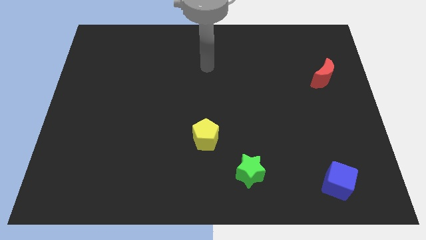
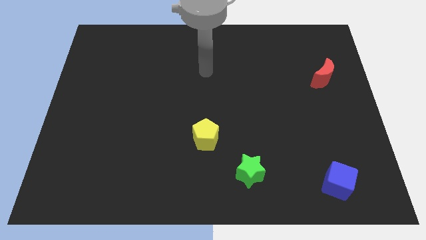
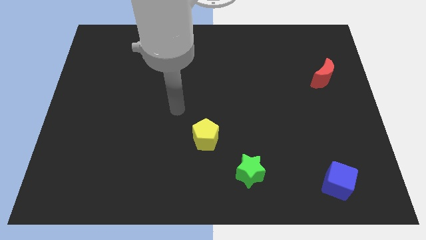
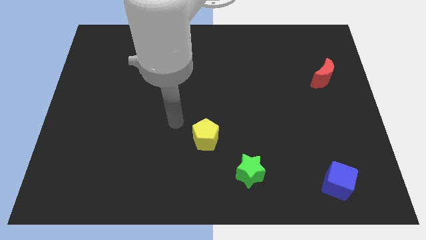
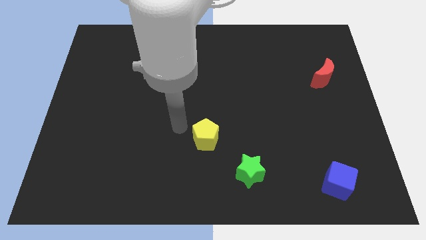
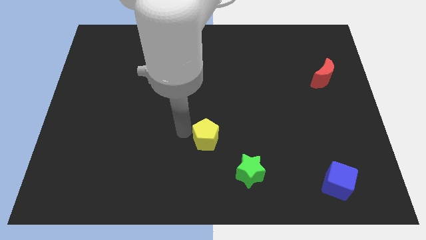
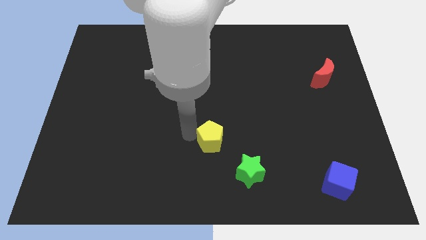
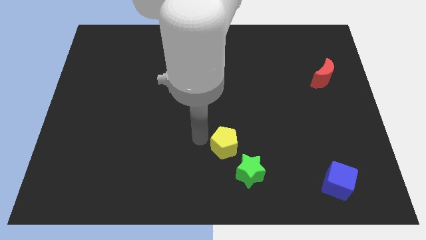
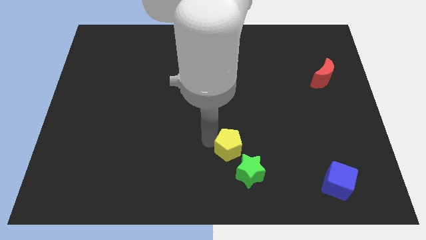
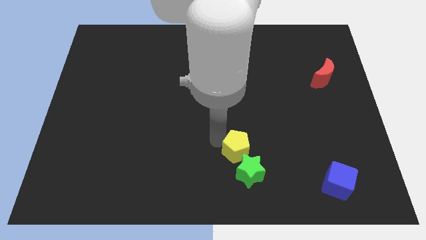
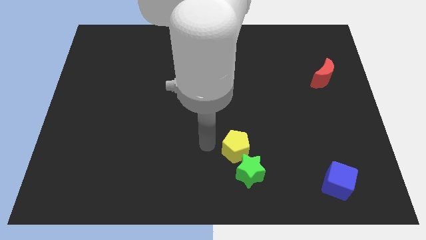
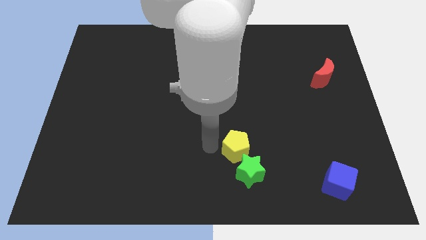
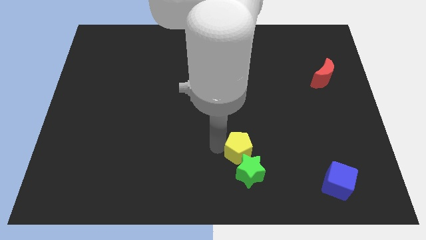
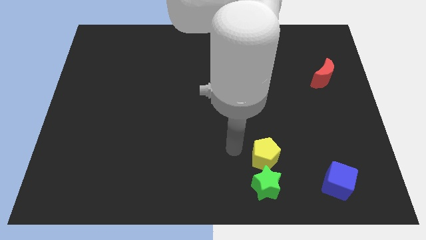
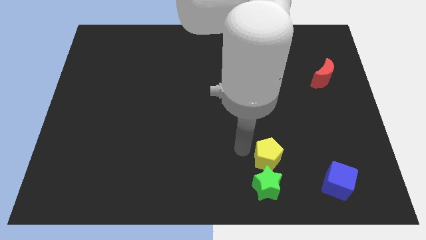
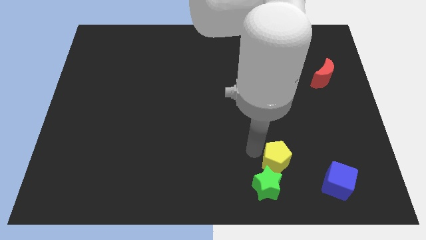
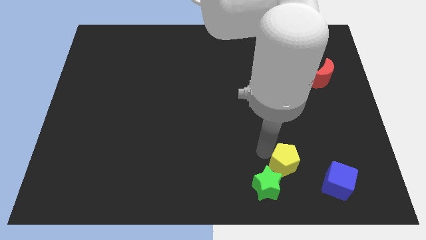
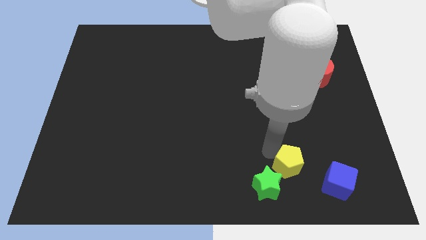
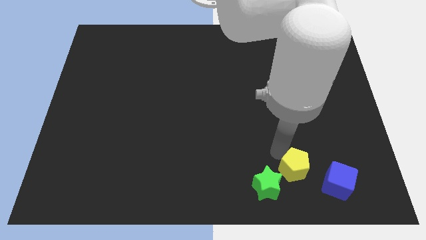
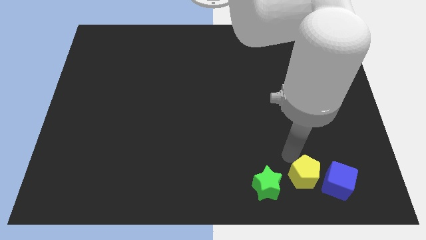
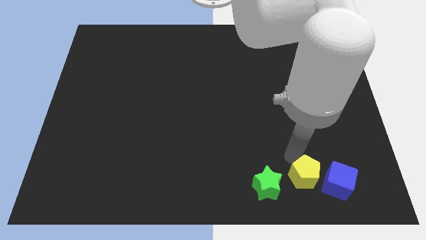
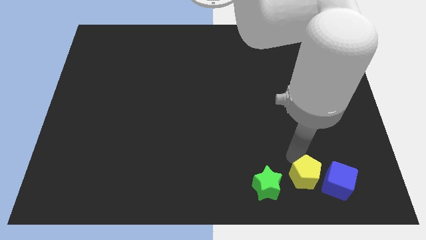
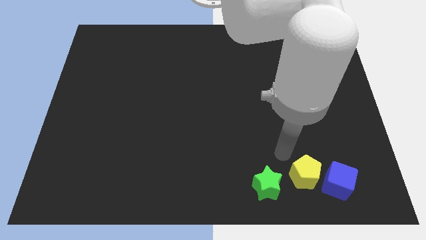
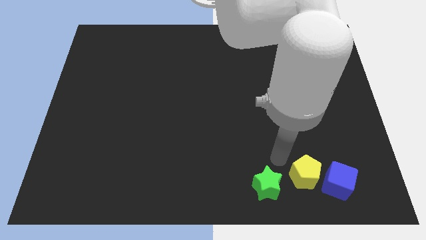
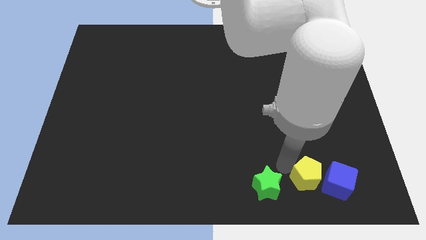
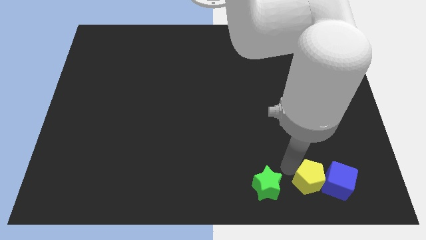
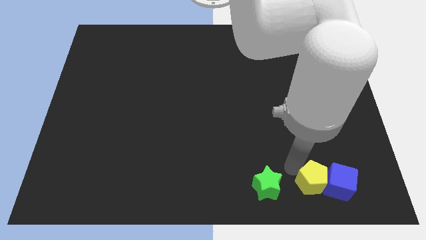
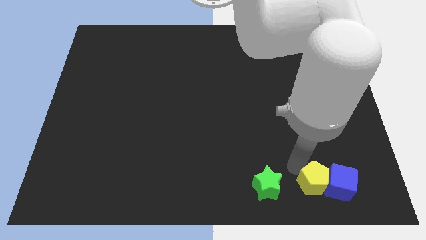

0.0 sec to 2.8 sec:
push the yellow block close to the blue cube

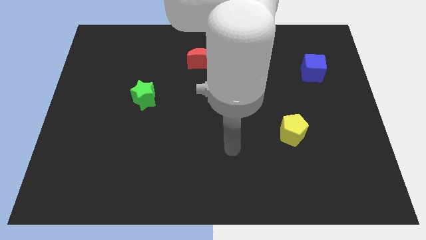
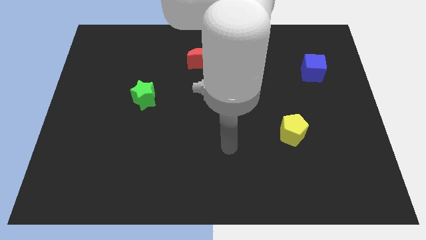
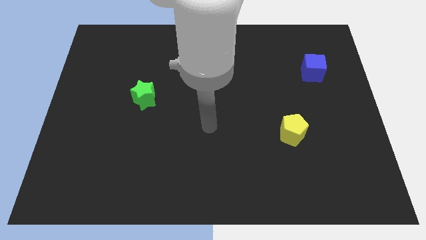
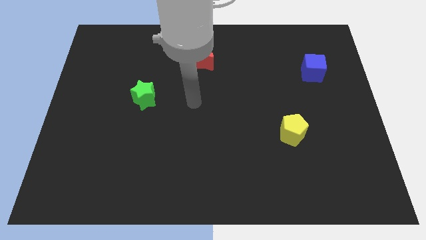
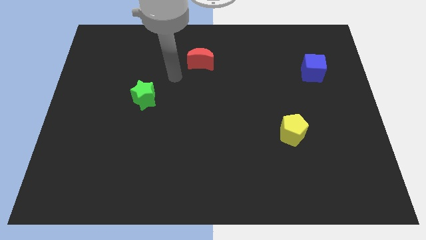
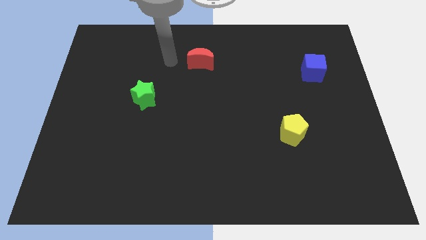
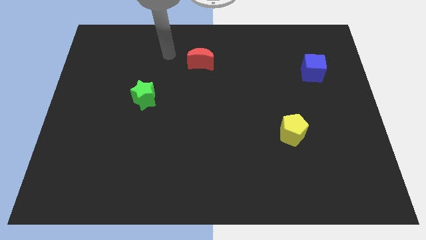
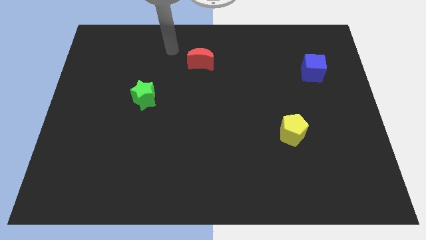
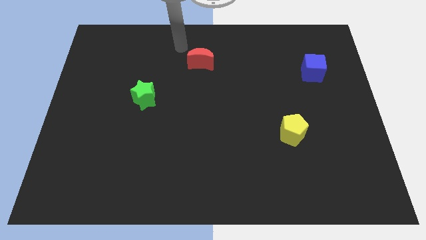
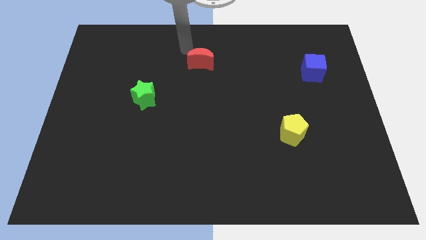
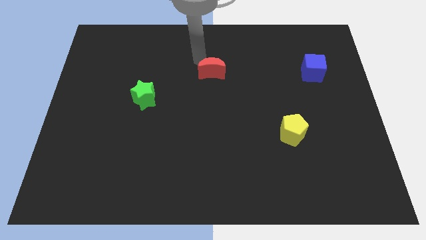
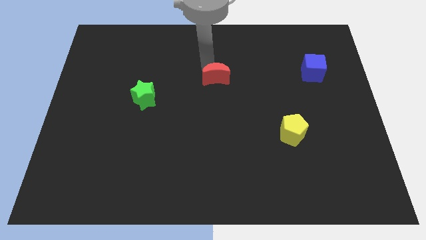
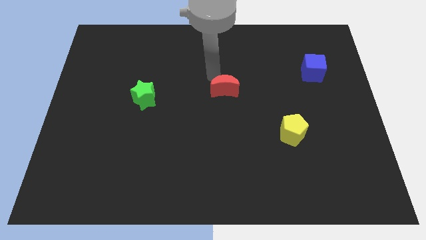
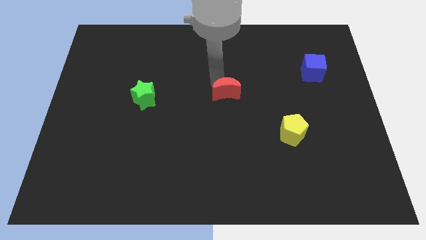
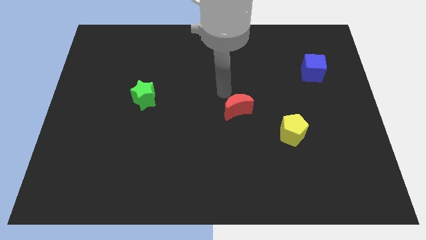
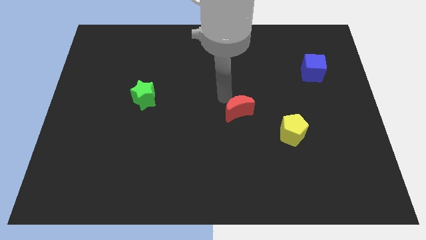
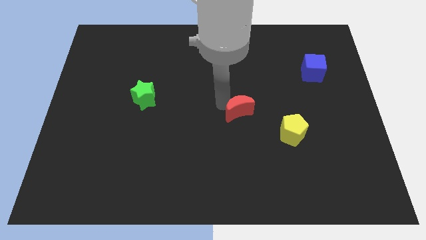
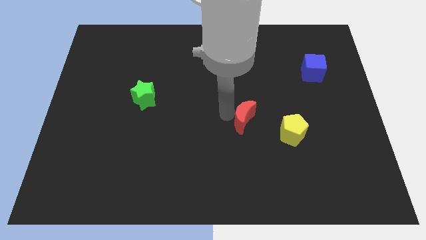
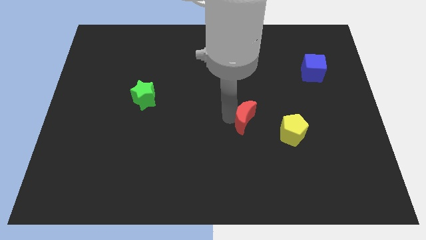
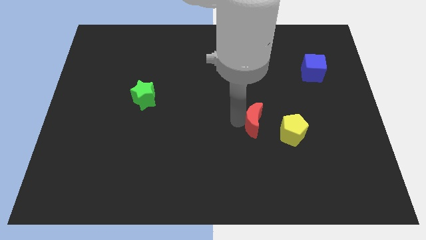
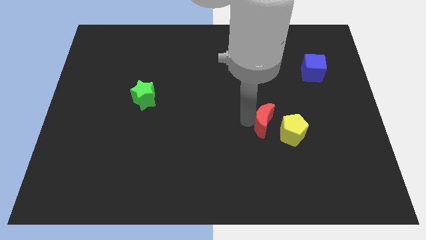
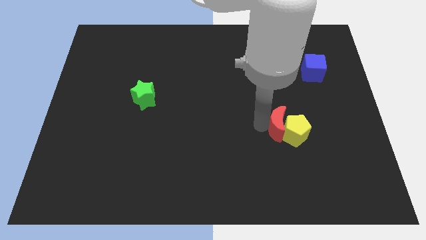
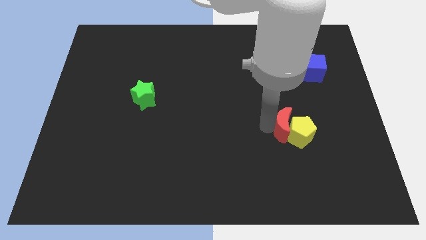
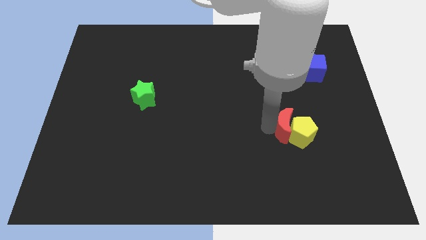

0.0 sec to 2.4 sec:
push the moon to the yellow pentagon

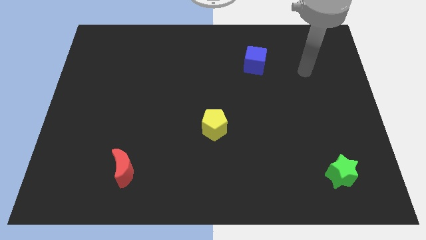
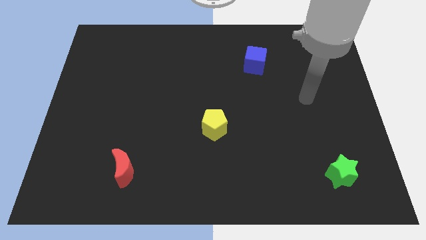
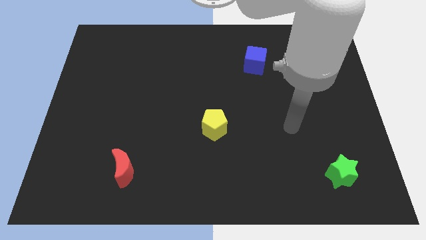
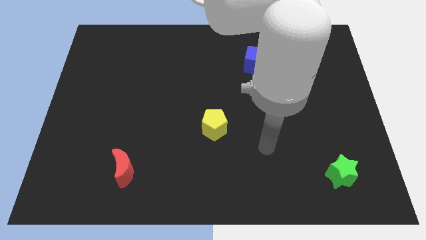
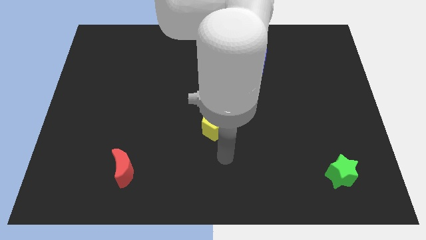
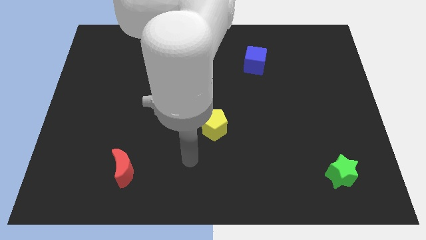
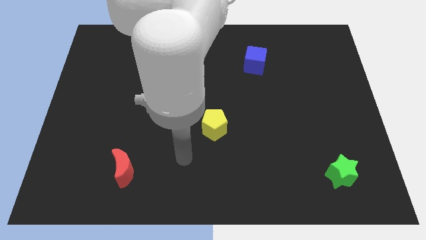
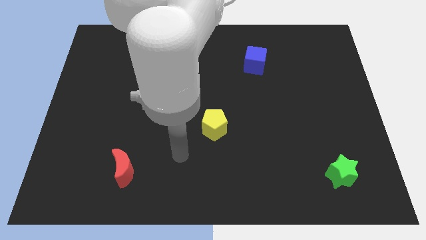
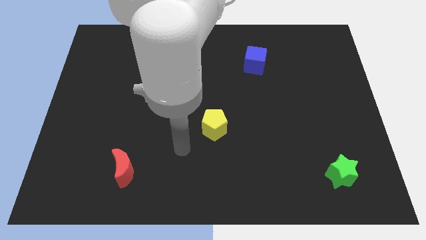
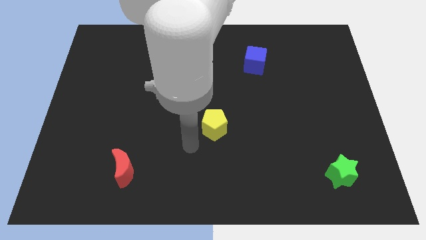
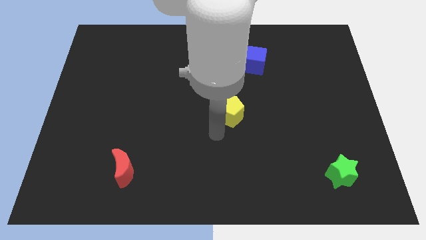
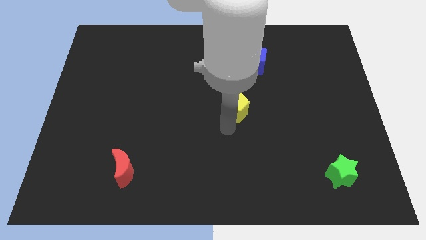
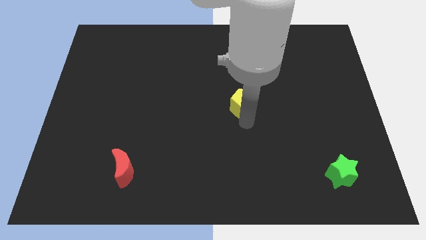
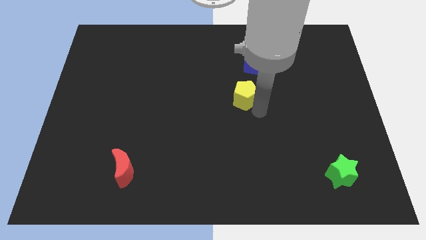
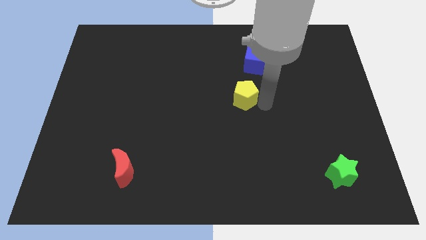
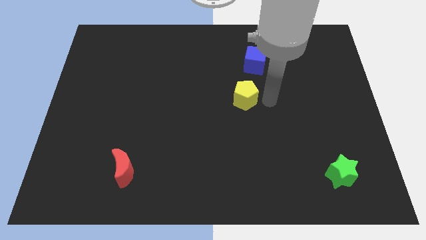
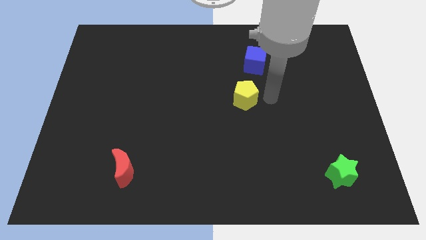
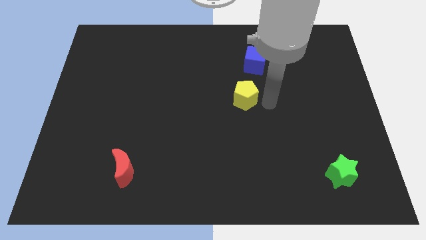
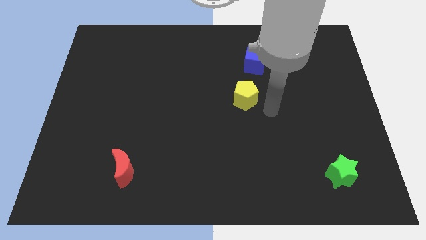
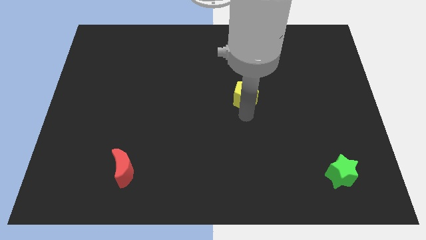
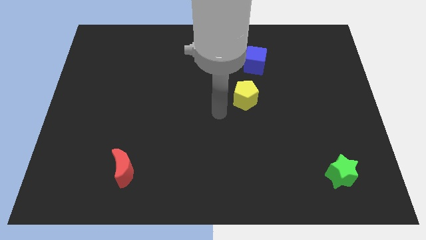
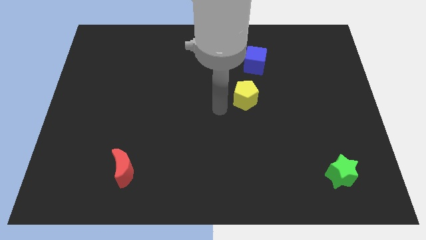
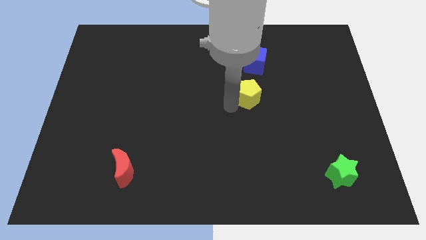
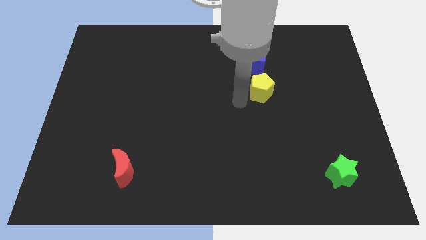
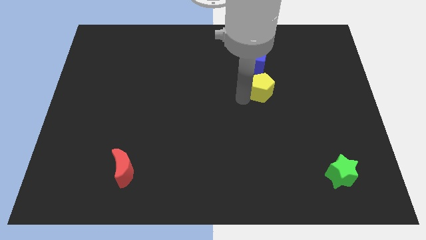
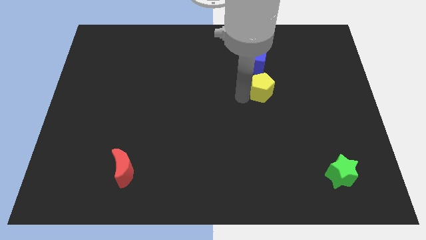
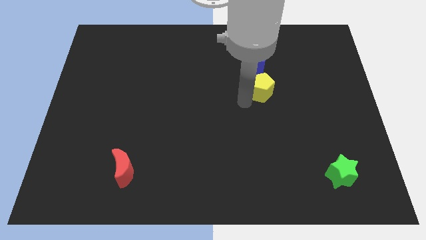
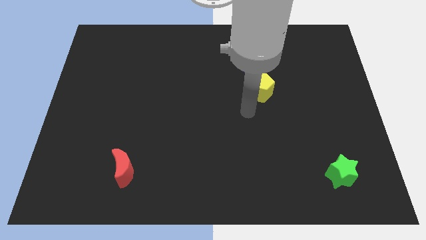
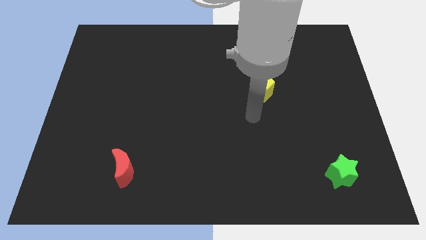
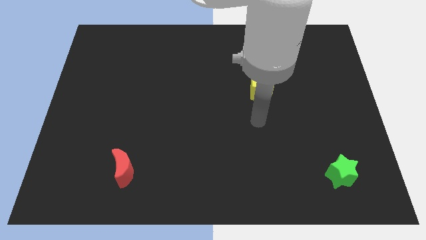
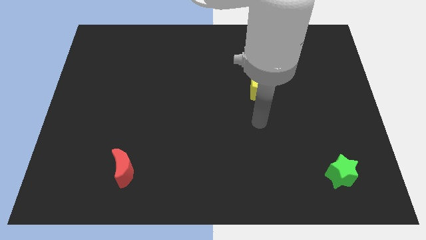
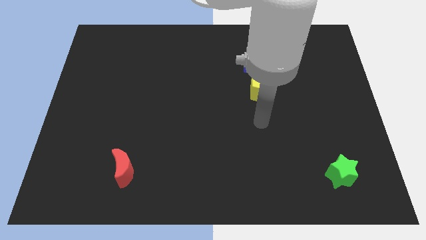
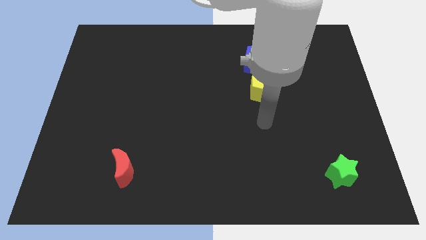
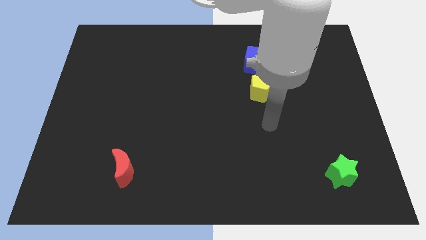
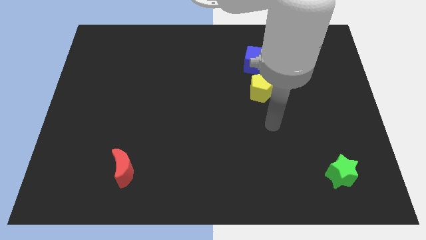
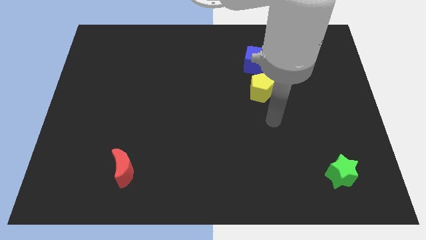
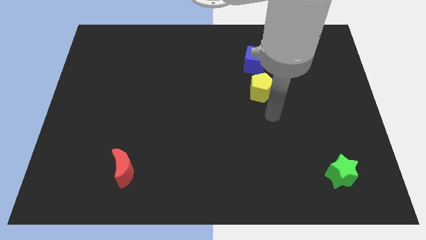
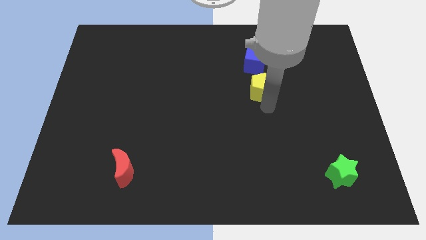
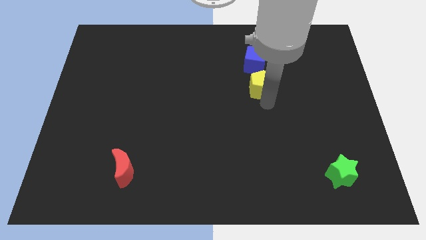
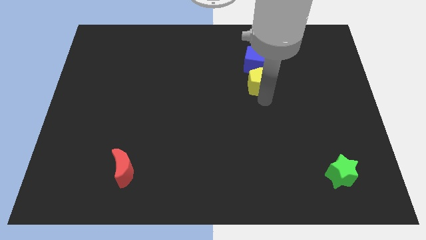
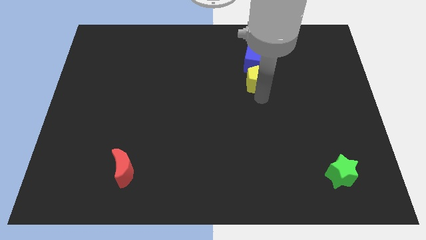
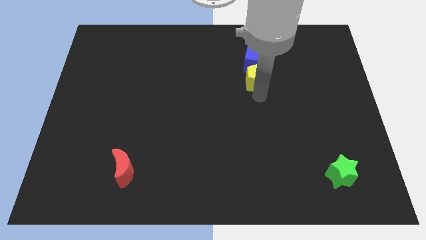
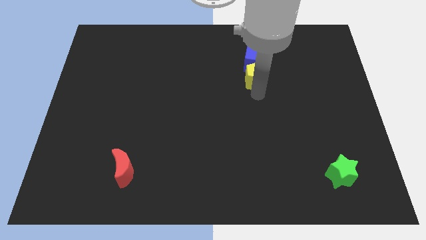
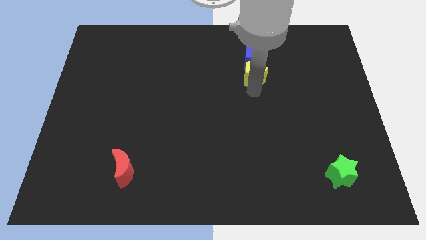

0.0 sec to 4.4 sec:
push the yellow block to the blue cube
